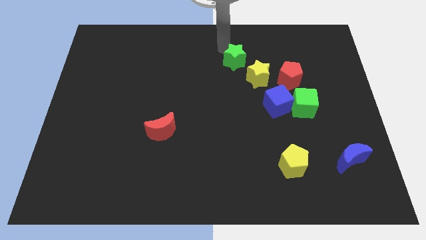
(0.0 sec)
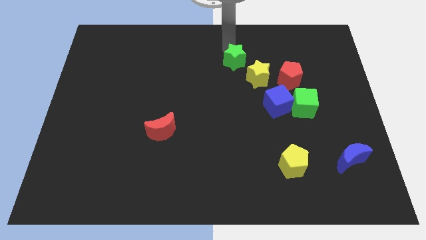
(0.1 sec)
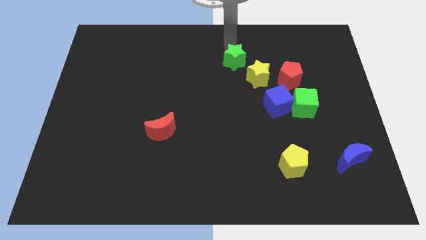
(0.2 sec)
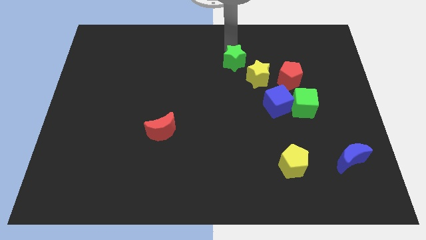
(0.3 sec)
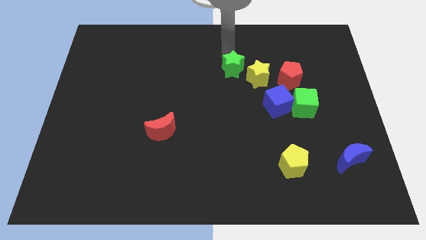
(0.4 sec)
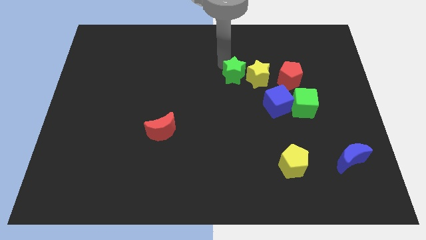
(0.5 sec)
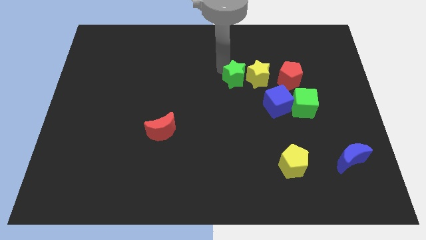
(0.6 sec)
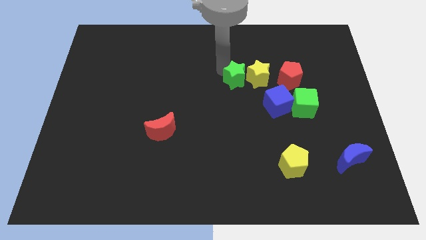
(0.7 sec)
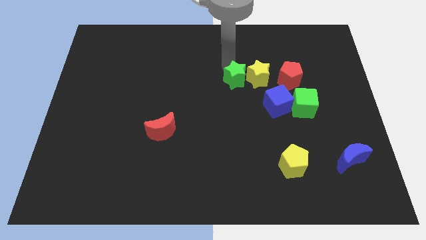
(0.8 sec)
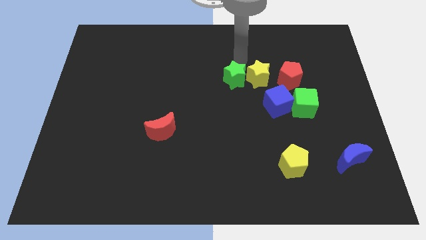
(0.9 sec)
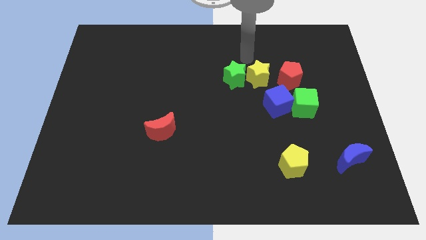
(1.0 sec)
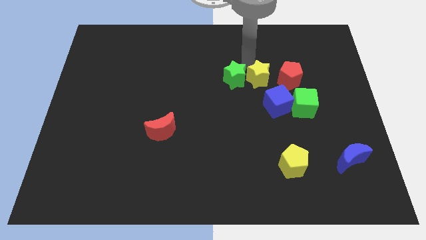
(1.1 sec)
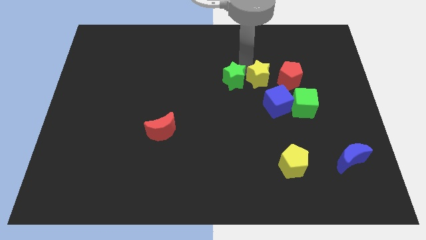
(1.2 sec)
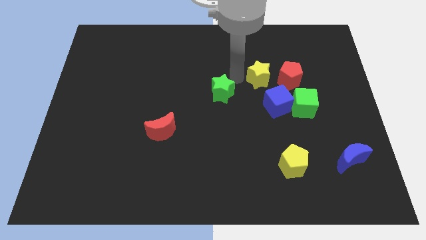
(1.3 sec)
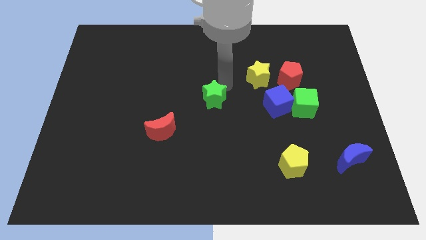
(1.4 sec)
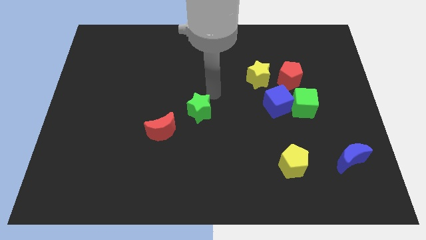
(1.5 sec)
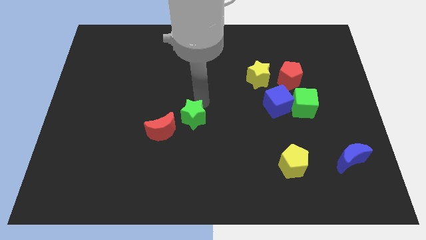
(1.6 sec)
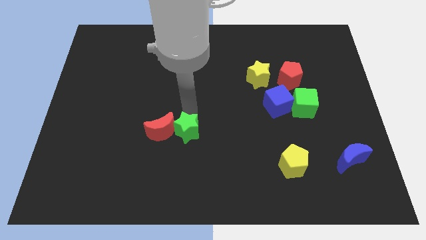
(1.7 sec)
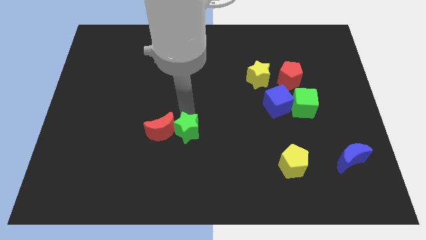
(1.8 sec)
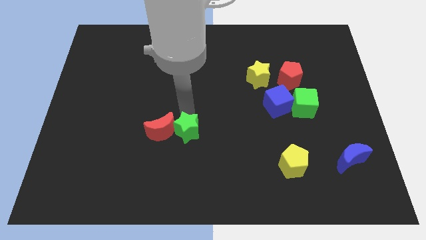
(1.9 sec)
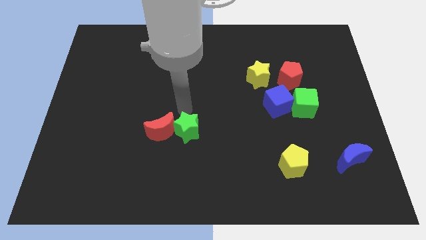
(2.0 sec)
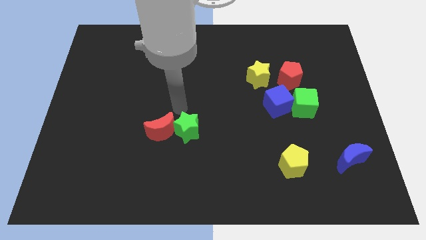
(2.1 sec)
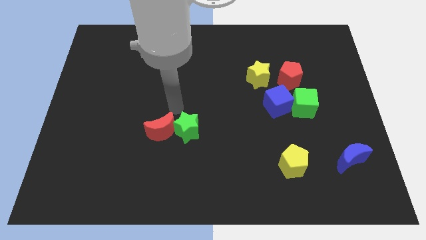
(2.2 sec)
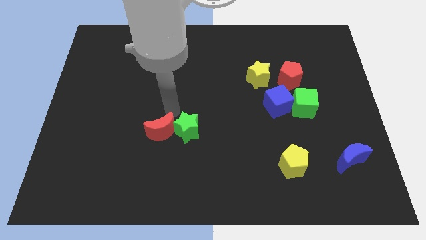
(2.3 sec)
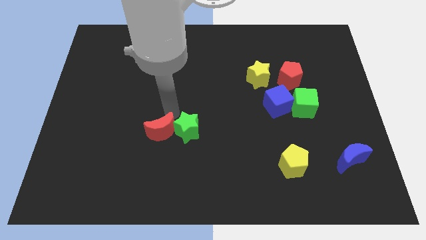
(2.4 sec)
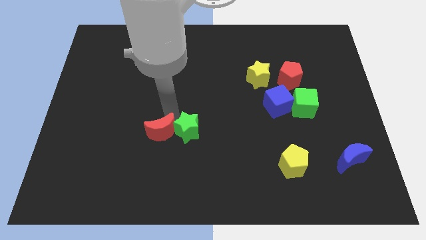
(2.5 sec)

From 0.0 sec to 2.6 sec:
place the green star right side of the red moon

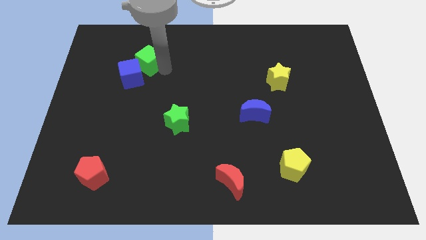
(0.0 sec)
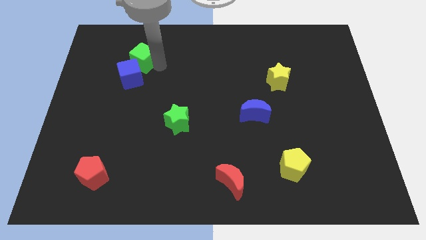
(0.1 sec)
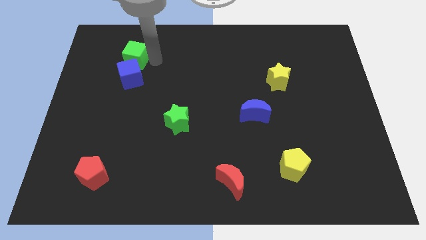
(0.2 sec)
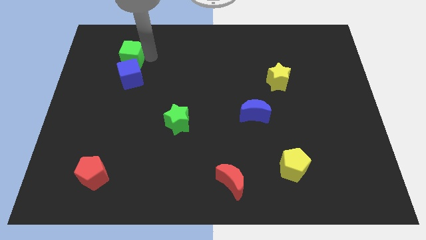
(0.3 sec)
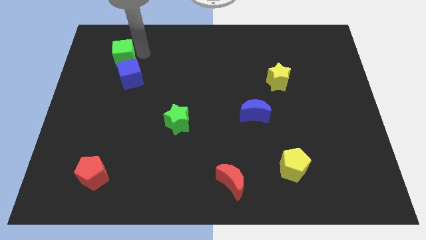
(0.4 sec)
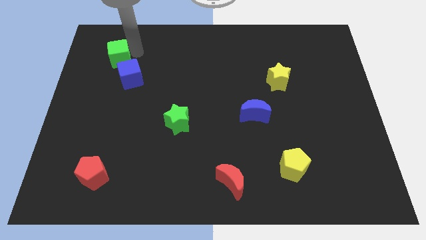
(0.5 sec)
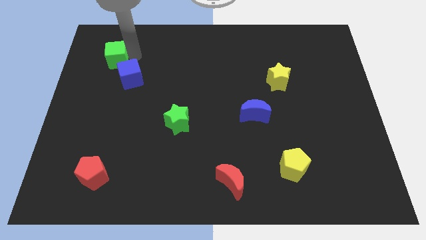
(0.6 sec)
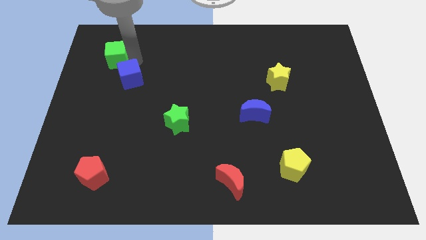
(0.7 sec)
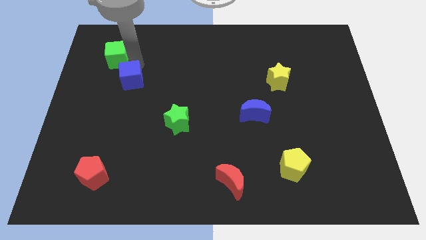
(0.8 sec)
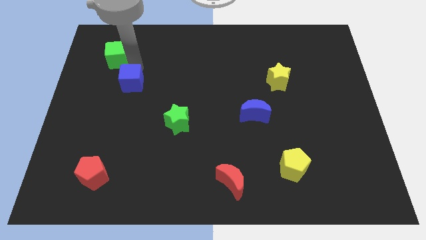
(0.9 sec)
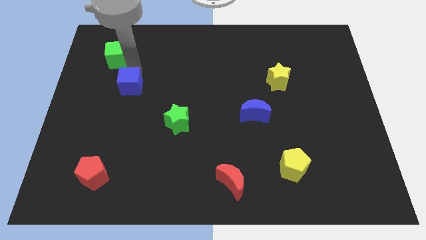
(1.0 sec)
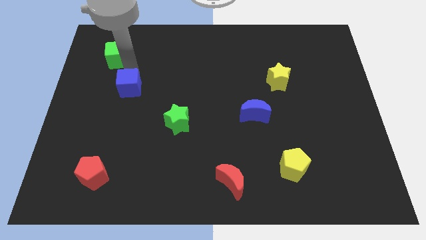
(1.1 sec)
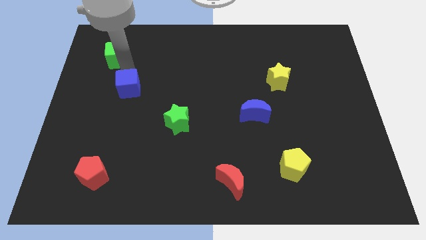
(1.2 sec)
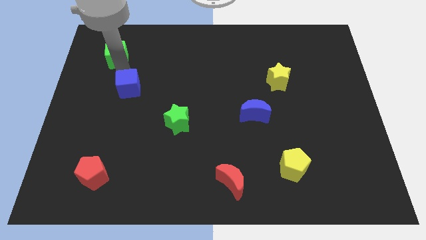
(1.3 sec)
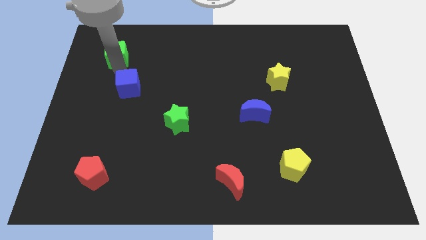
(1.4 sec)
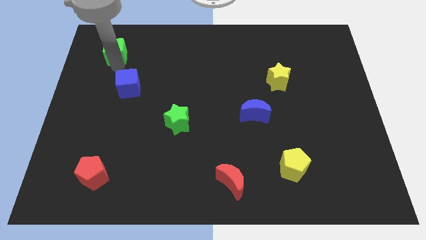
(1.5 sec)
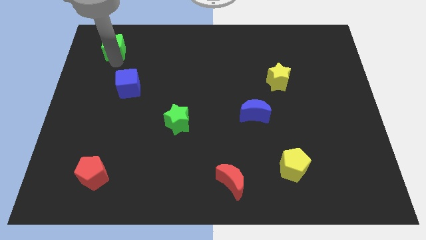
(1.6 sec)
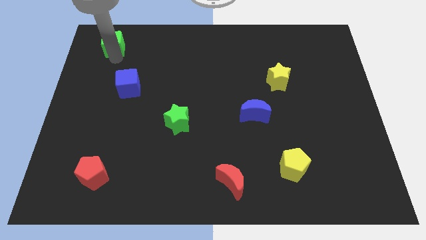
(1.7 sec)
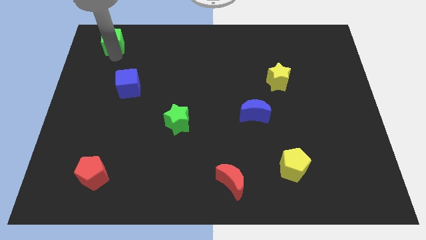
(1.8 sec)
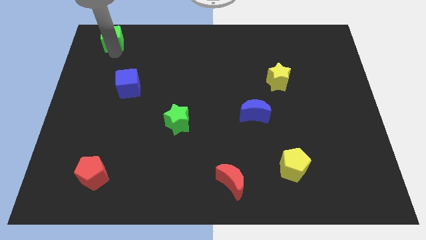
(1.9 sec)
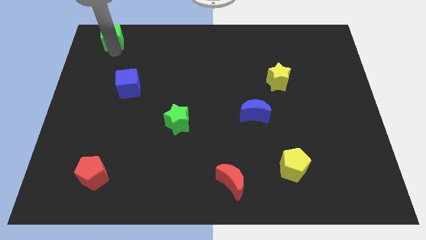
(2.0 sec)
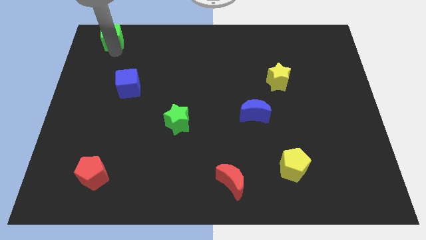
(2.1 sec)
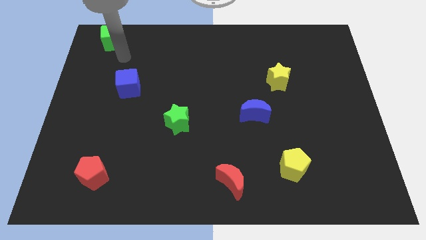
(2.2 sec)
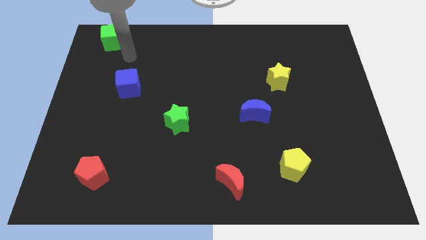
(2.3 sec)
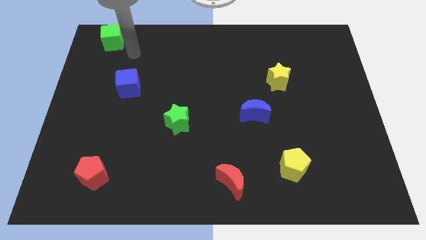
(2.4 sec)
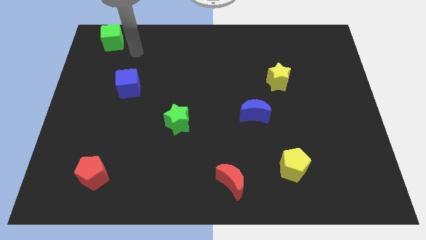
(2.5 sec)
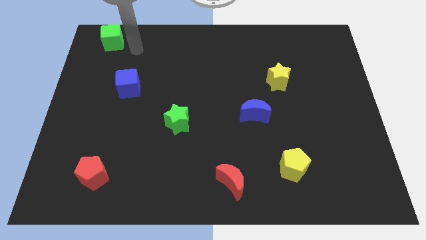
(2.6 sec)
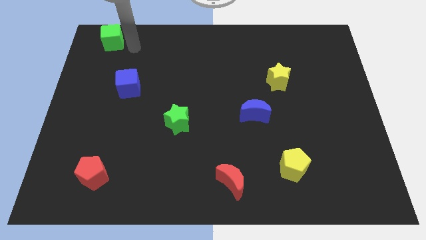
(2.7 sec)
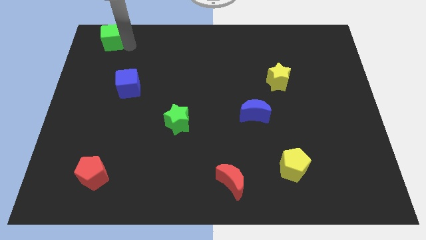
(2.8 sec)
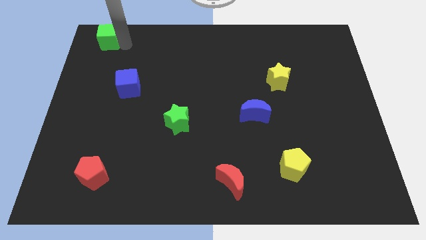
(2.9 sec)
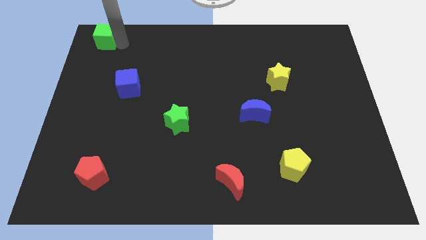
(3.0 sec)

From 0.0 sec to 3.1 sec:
separate green cube from blue cube

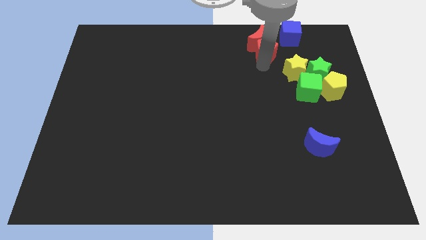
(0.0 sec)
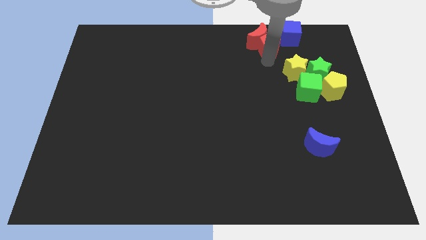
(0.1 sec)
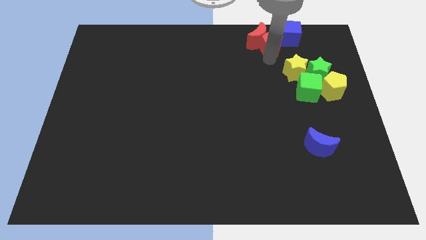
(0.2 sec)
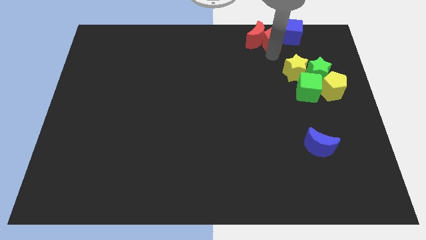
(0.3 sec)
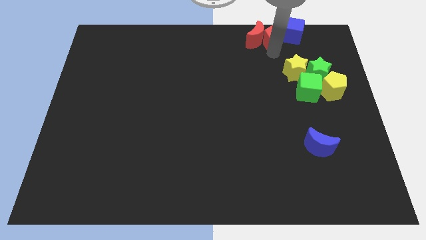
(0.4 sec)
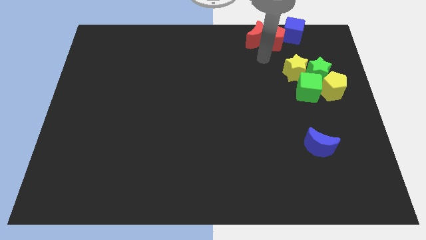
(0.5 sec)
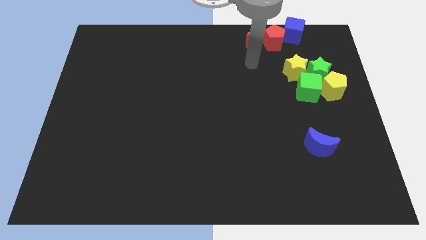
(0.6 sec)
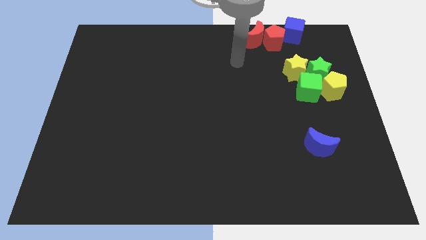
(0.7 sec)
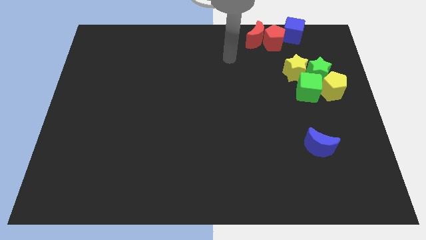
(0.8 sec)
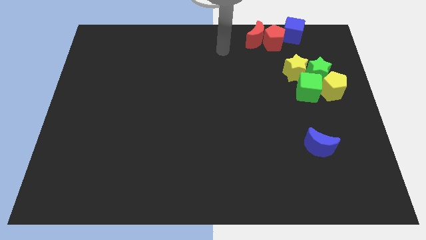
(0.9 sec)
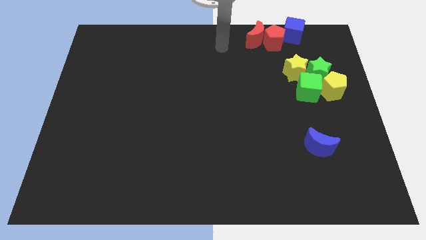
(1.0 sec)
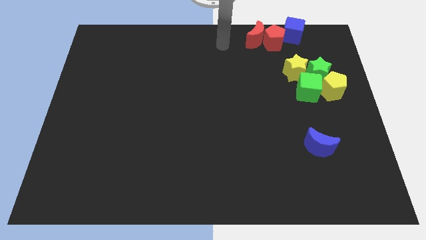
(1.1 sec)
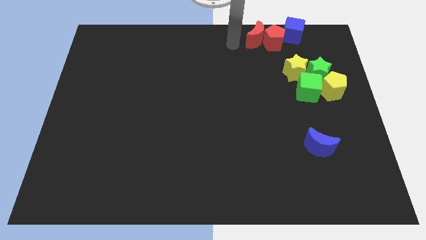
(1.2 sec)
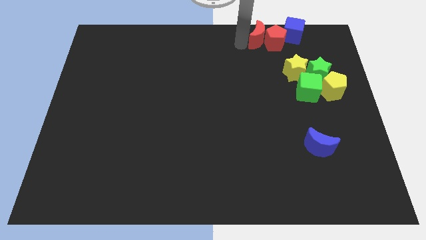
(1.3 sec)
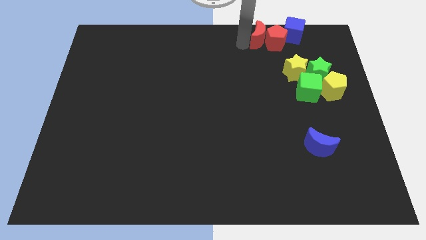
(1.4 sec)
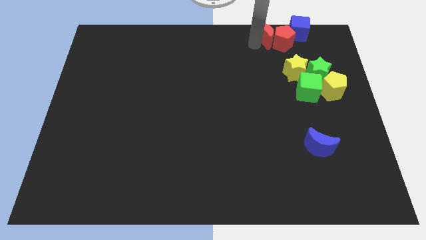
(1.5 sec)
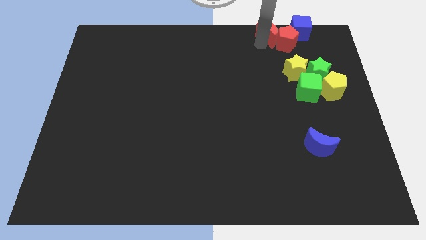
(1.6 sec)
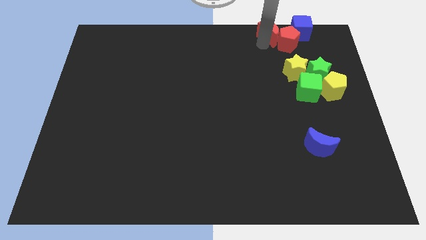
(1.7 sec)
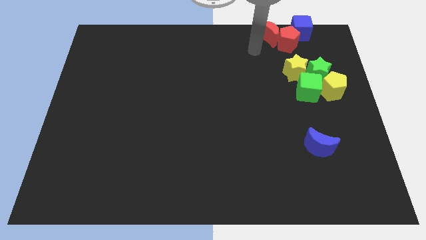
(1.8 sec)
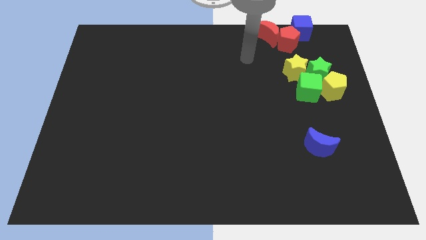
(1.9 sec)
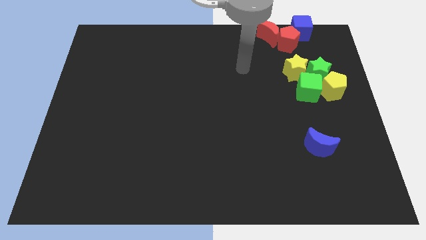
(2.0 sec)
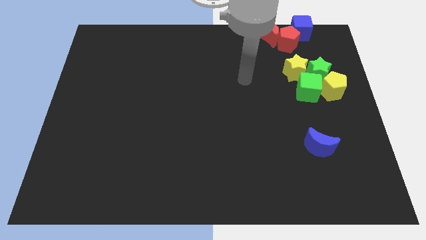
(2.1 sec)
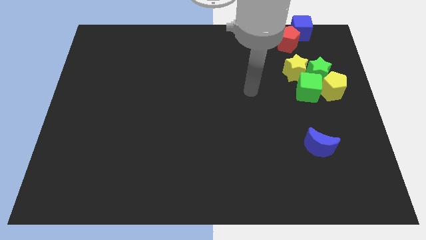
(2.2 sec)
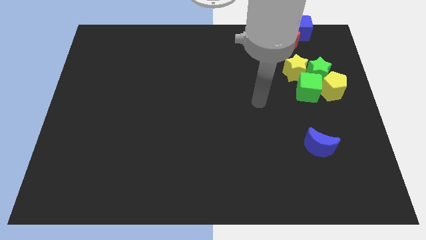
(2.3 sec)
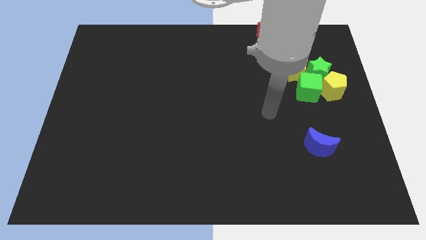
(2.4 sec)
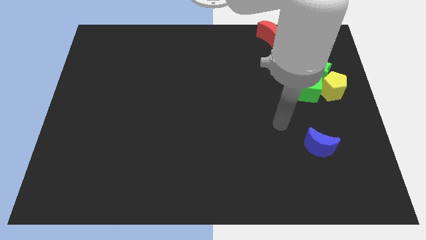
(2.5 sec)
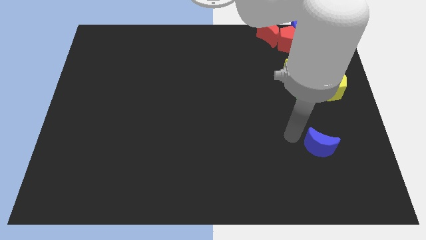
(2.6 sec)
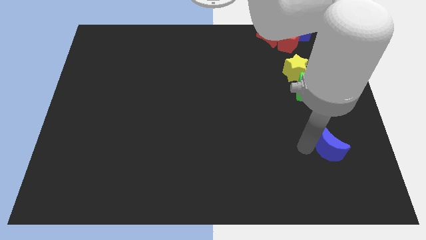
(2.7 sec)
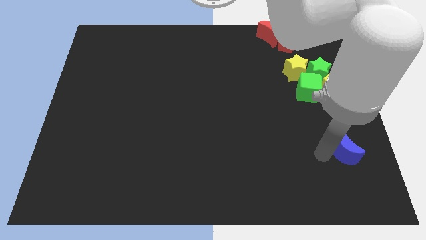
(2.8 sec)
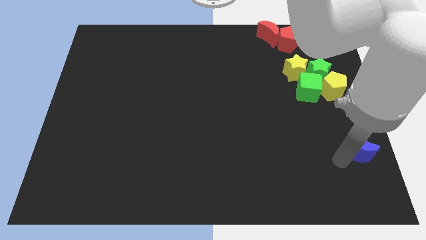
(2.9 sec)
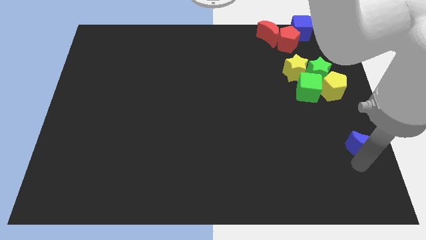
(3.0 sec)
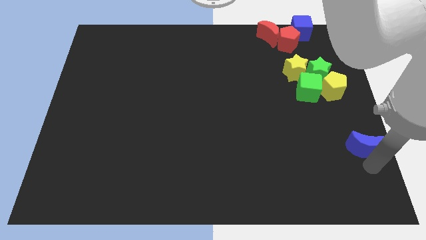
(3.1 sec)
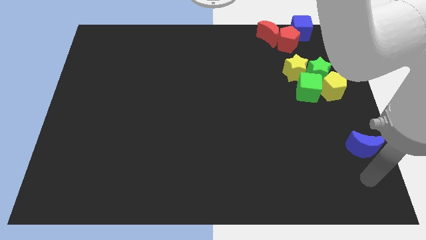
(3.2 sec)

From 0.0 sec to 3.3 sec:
push group of blocks to the rright corner
